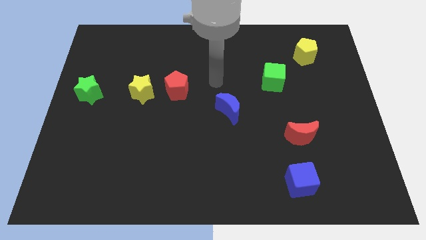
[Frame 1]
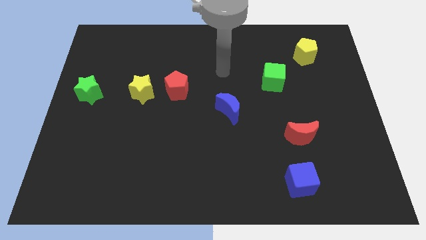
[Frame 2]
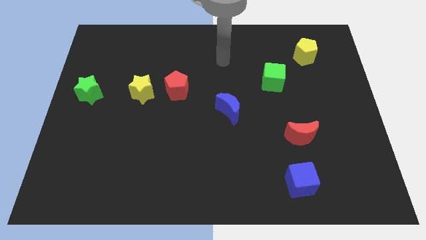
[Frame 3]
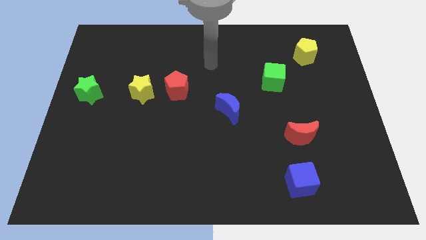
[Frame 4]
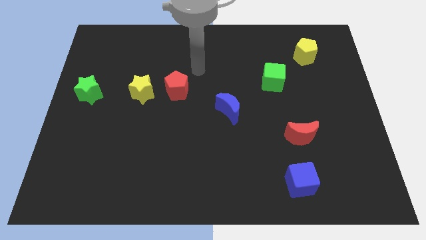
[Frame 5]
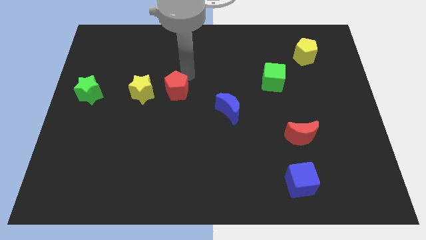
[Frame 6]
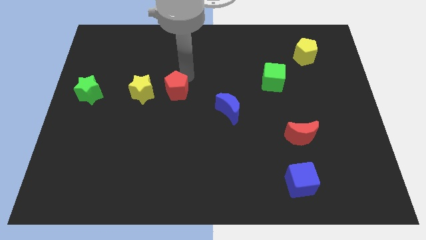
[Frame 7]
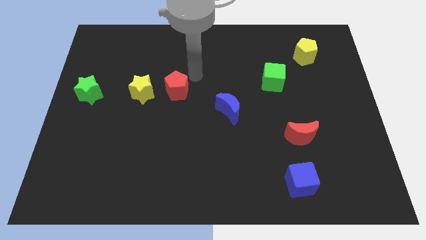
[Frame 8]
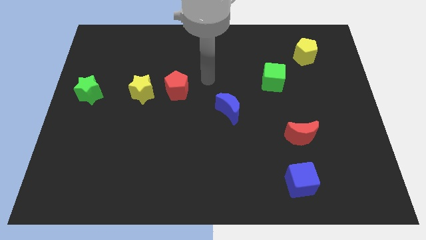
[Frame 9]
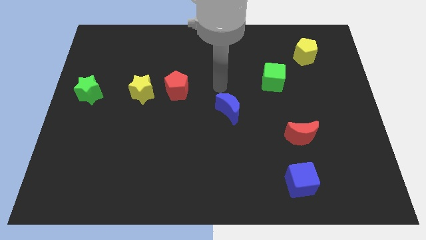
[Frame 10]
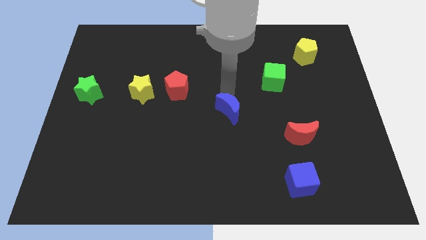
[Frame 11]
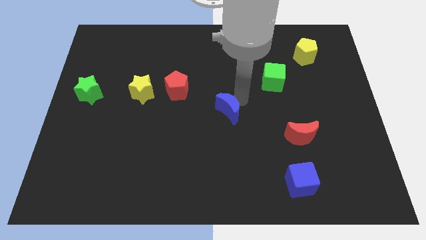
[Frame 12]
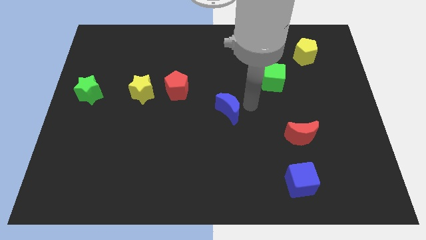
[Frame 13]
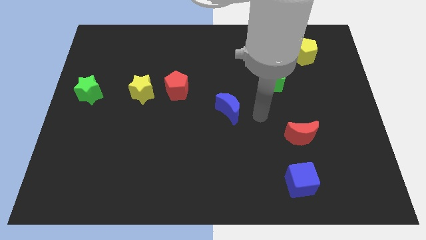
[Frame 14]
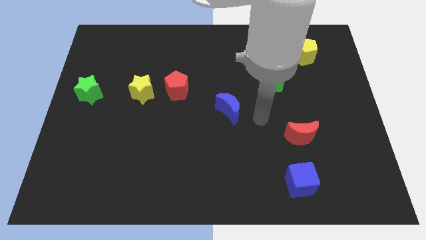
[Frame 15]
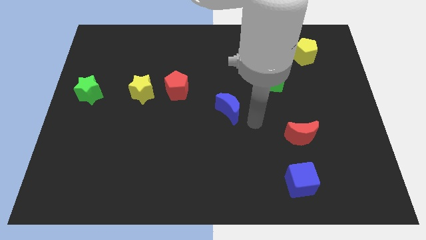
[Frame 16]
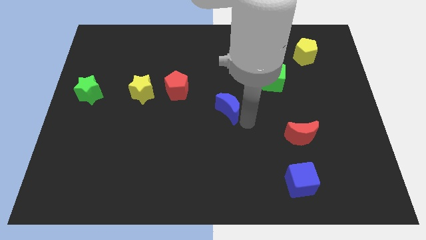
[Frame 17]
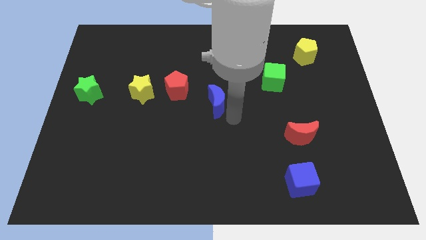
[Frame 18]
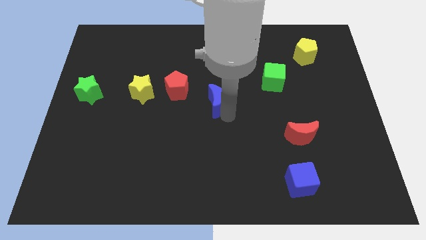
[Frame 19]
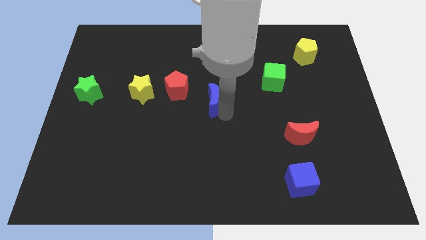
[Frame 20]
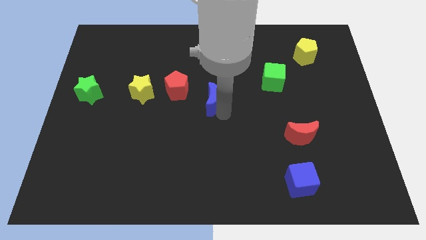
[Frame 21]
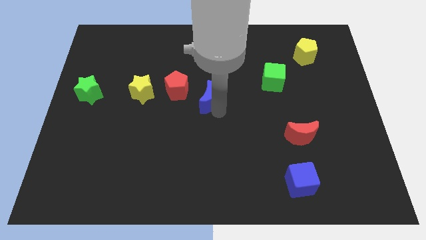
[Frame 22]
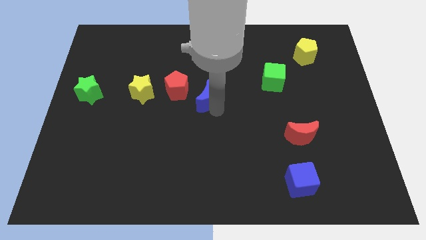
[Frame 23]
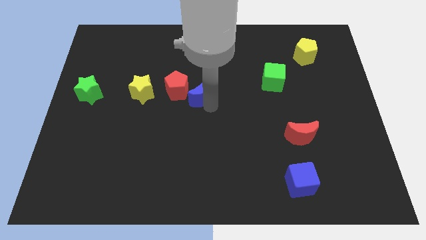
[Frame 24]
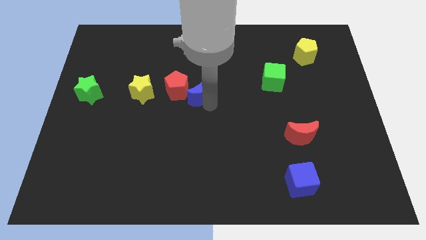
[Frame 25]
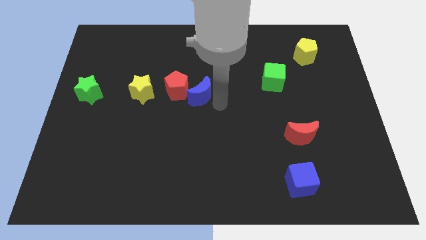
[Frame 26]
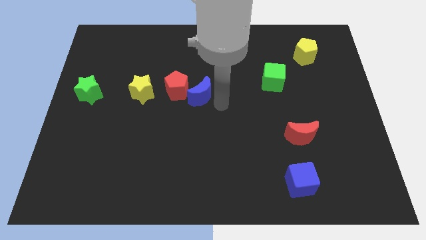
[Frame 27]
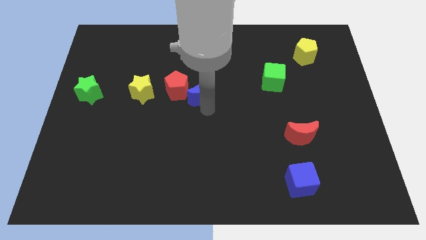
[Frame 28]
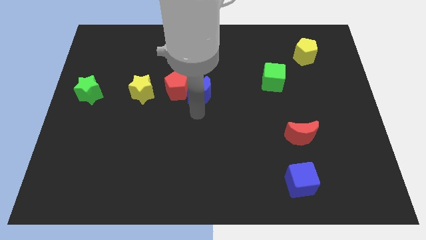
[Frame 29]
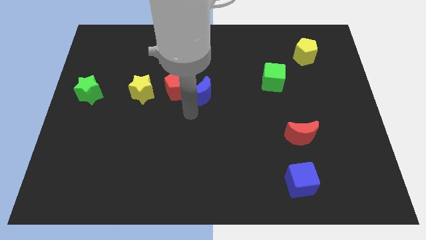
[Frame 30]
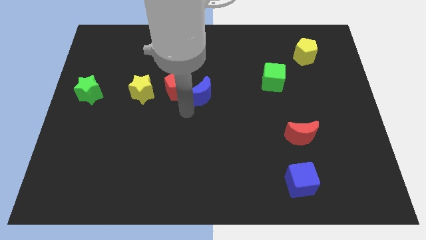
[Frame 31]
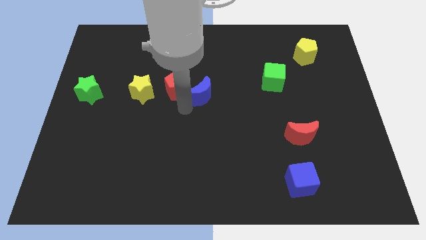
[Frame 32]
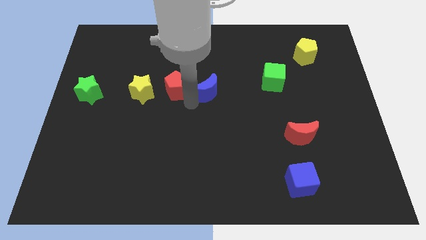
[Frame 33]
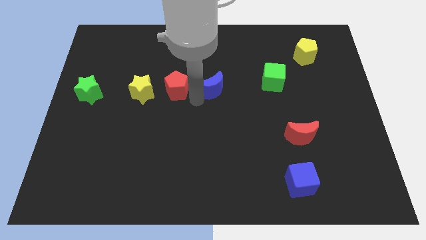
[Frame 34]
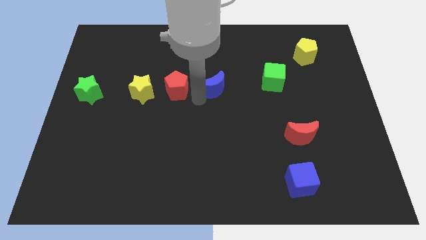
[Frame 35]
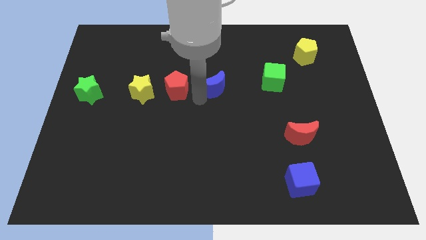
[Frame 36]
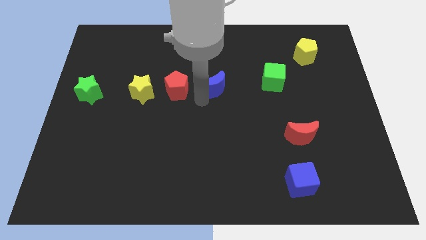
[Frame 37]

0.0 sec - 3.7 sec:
move the blue crescent to the right of the red pentagon

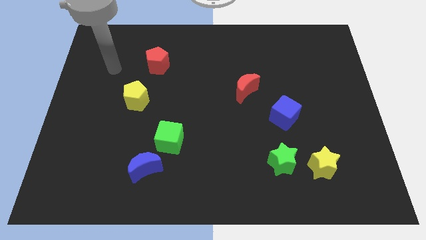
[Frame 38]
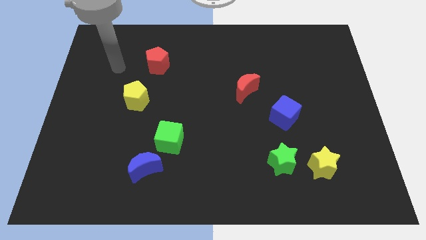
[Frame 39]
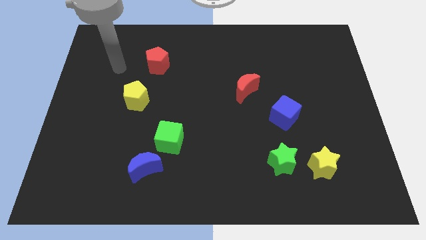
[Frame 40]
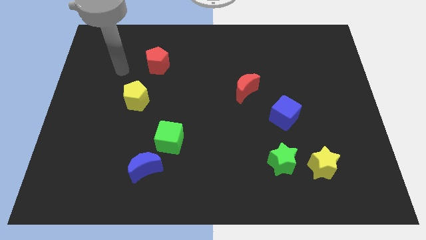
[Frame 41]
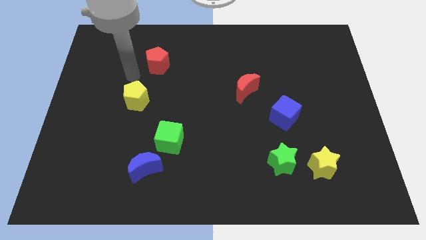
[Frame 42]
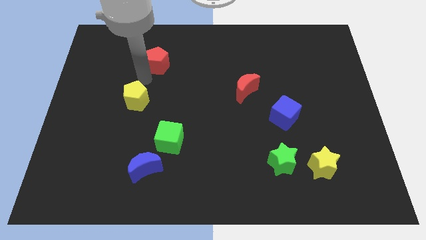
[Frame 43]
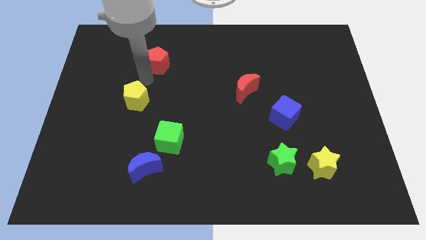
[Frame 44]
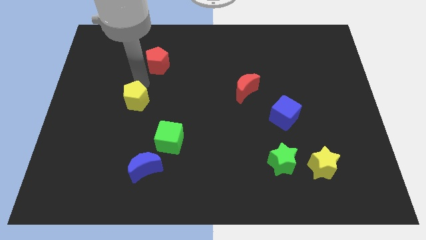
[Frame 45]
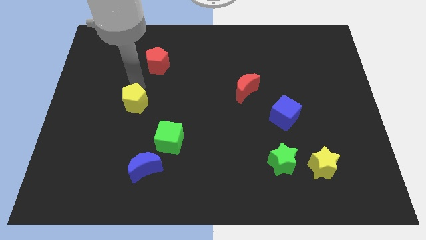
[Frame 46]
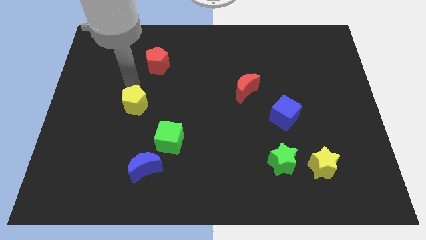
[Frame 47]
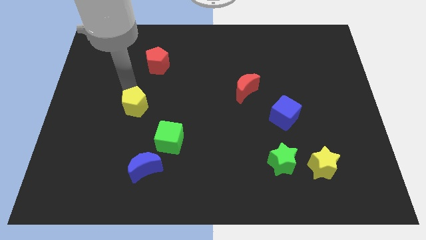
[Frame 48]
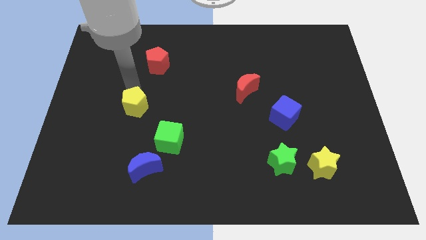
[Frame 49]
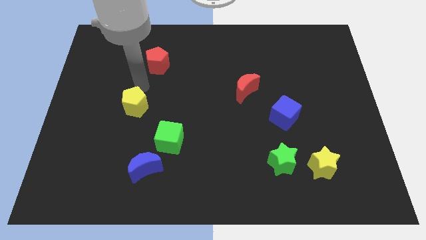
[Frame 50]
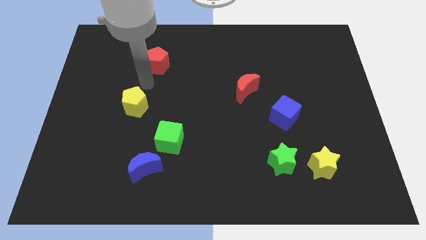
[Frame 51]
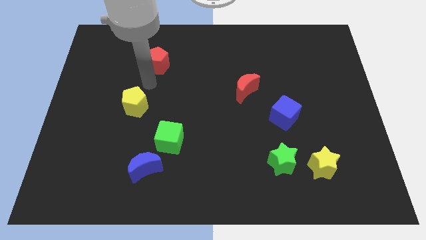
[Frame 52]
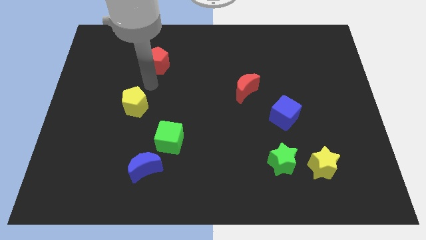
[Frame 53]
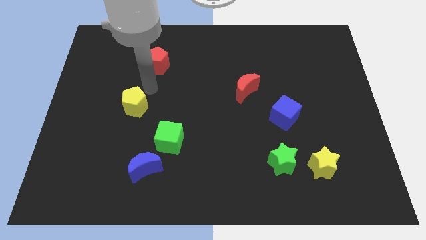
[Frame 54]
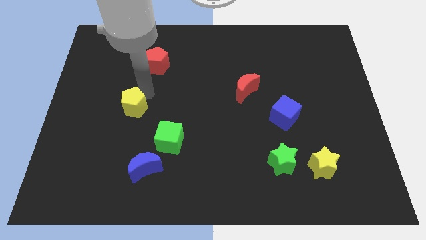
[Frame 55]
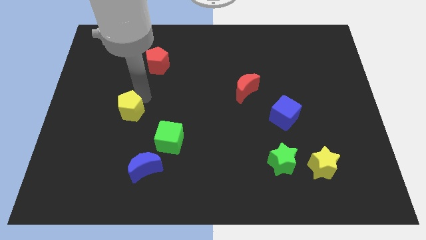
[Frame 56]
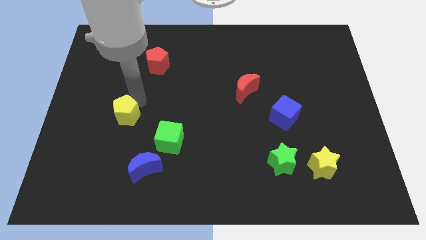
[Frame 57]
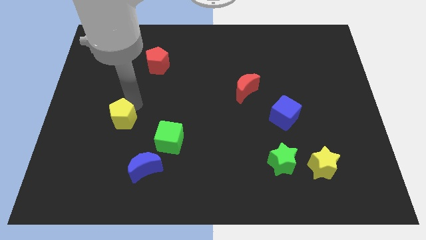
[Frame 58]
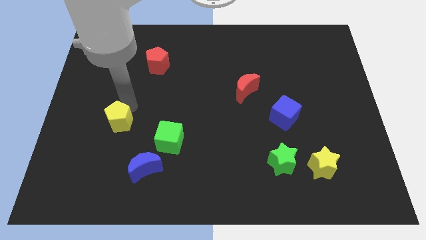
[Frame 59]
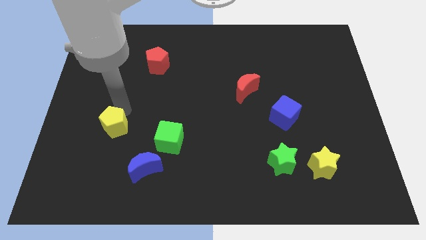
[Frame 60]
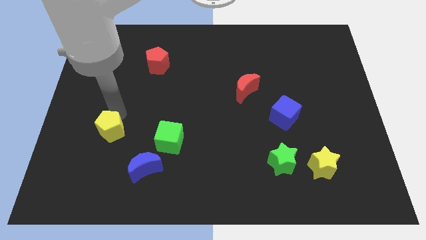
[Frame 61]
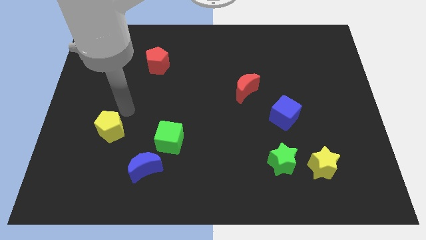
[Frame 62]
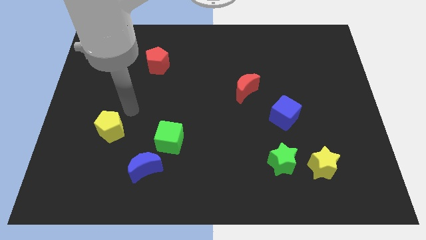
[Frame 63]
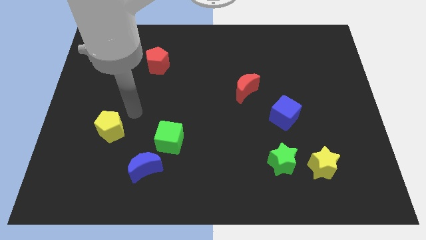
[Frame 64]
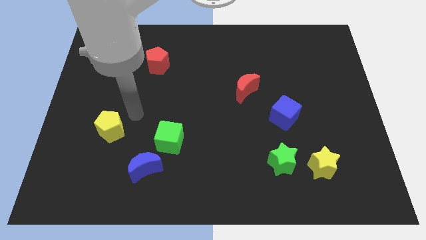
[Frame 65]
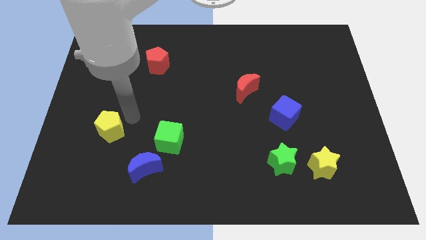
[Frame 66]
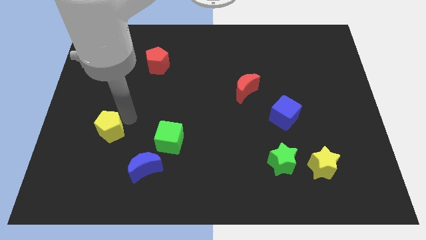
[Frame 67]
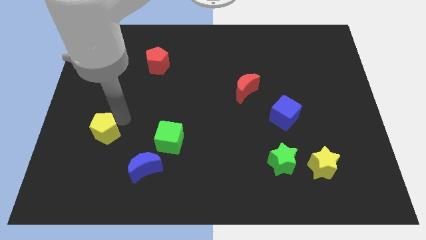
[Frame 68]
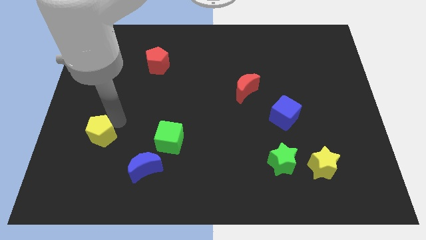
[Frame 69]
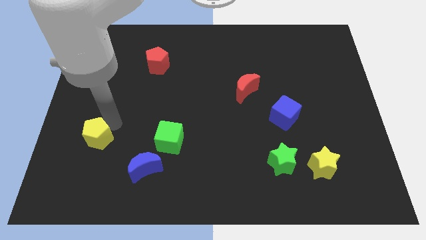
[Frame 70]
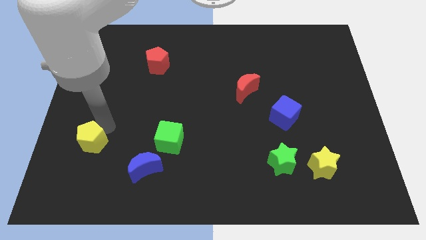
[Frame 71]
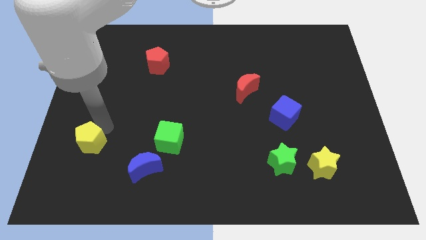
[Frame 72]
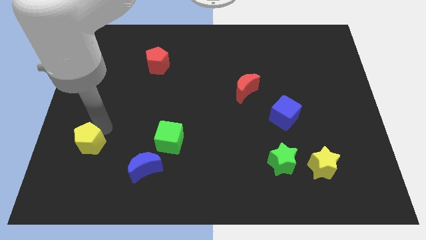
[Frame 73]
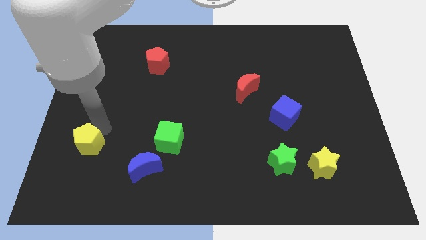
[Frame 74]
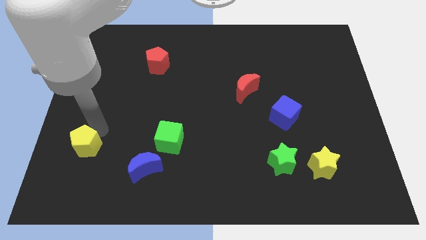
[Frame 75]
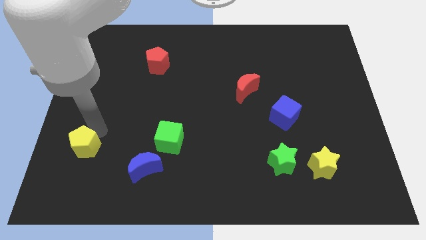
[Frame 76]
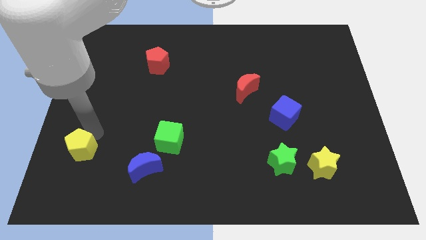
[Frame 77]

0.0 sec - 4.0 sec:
move yellow pentagon downwards

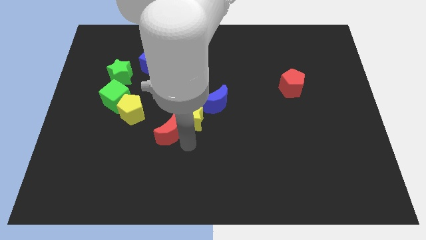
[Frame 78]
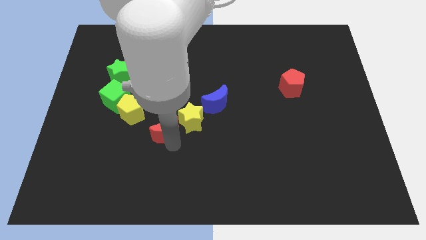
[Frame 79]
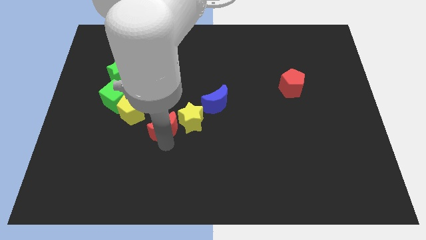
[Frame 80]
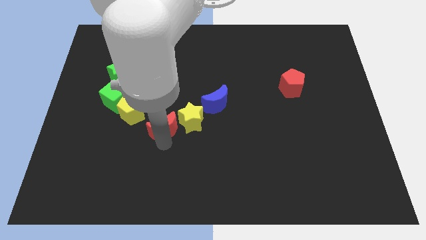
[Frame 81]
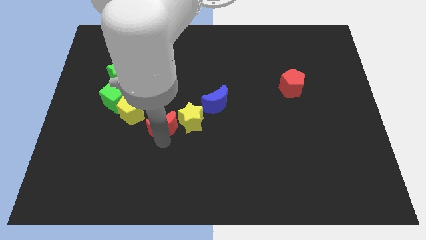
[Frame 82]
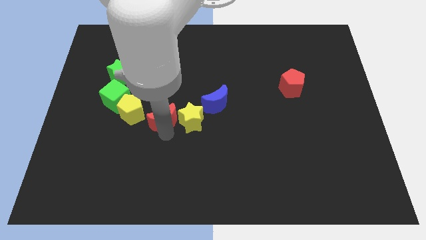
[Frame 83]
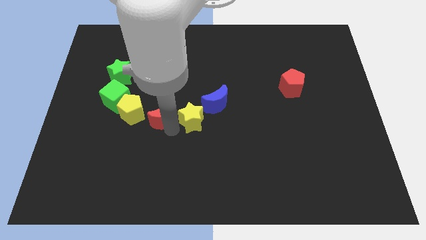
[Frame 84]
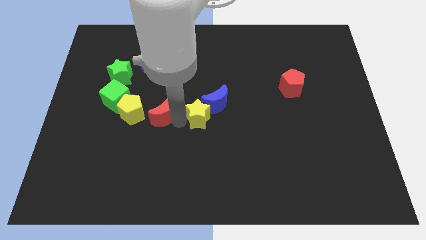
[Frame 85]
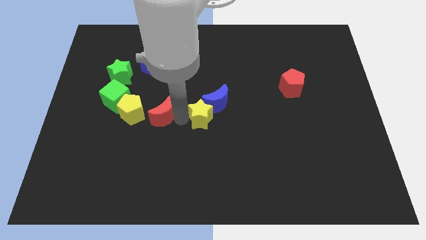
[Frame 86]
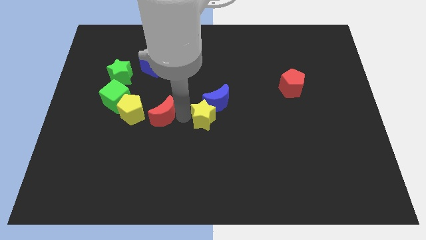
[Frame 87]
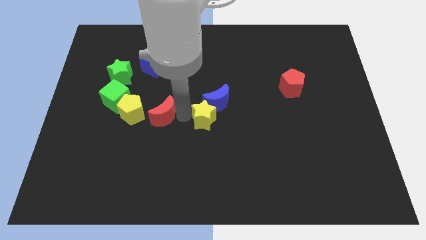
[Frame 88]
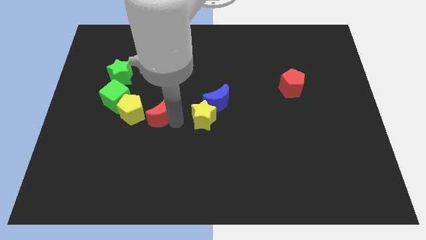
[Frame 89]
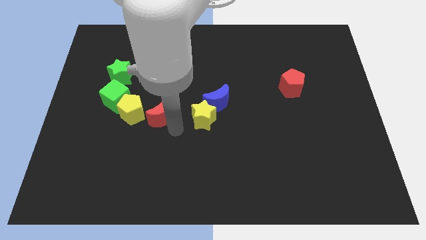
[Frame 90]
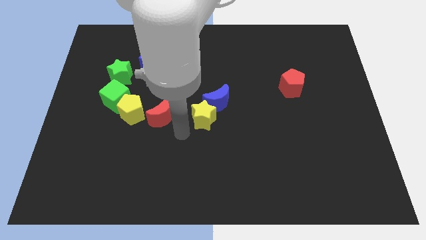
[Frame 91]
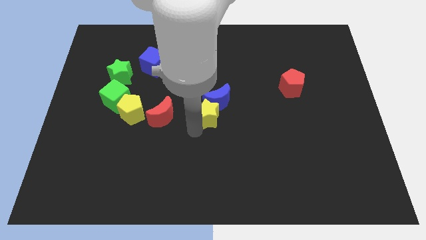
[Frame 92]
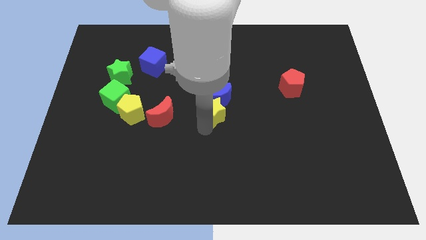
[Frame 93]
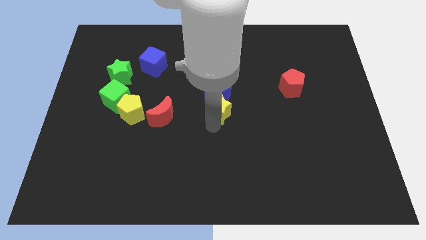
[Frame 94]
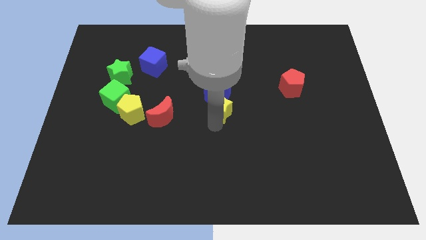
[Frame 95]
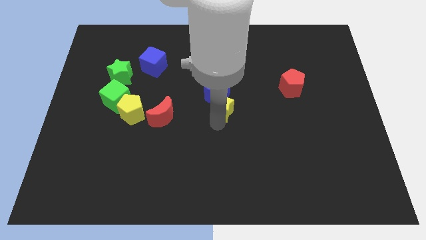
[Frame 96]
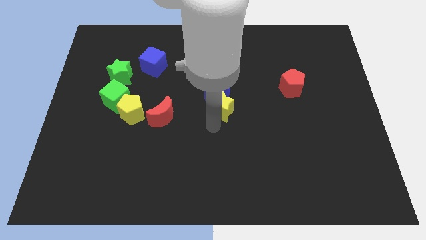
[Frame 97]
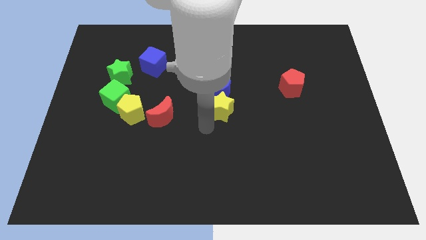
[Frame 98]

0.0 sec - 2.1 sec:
separate the yellow star from the red moon
